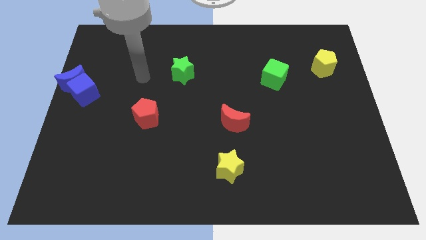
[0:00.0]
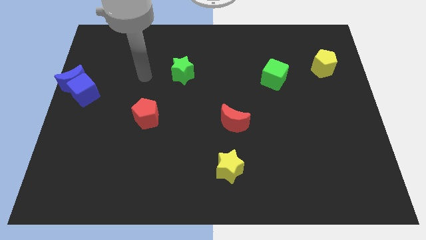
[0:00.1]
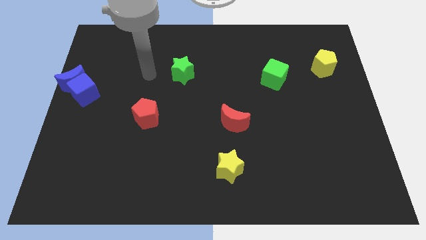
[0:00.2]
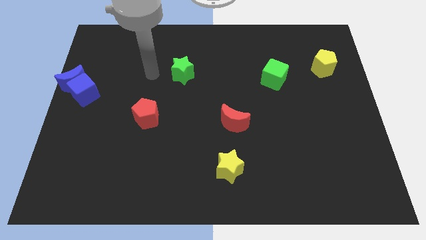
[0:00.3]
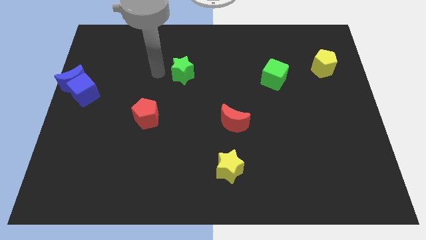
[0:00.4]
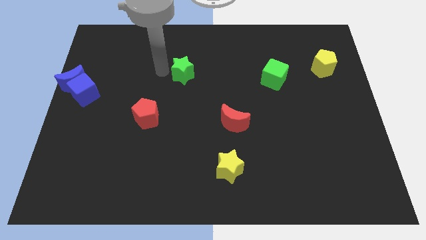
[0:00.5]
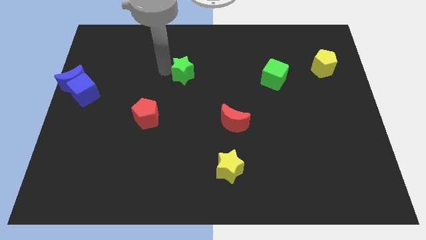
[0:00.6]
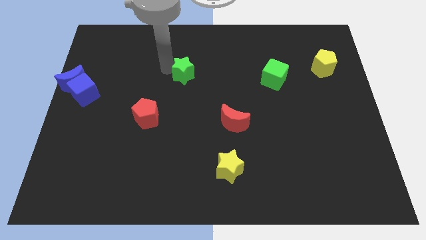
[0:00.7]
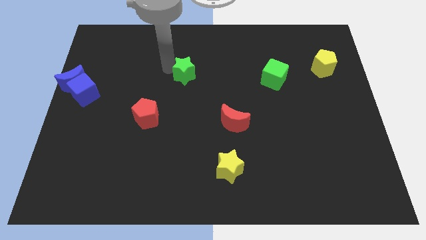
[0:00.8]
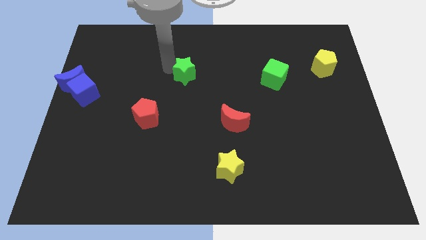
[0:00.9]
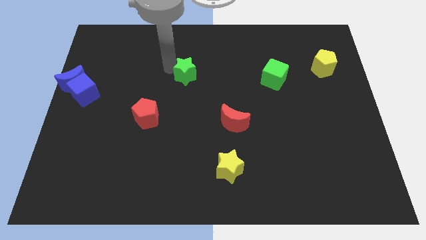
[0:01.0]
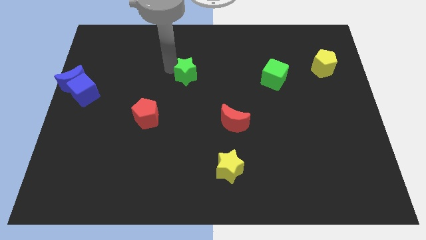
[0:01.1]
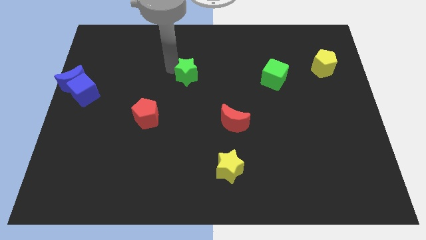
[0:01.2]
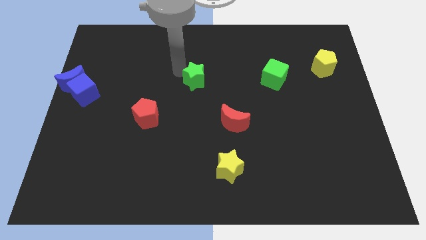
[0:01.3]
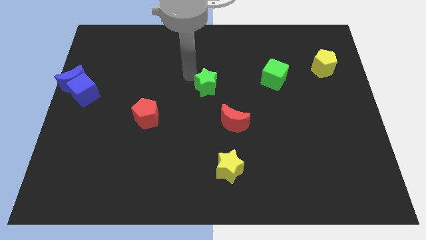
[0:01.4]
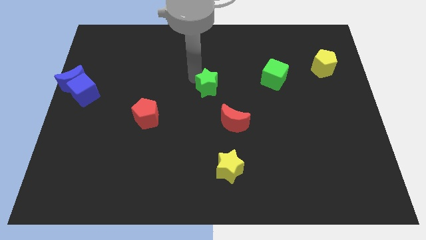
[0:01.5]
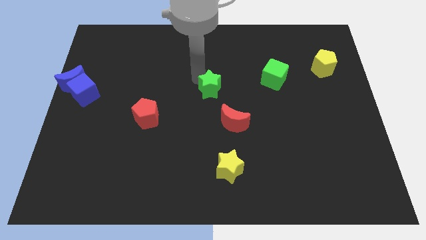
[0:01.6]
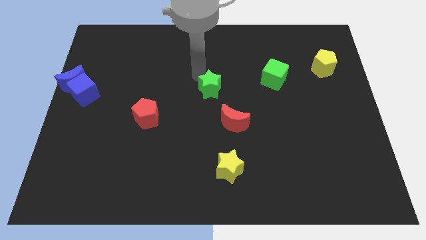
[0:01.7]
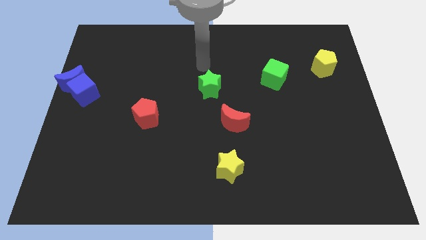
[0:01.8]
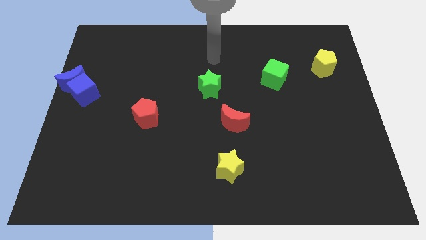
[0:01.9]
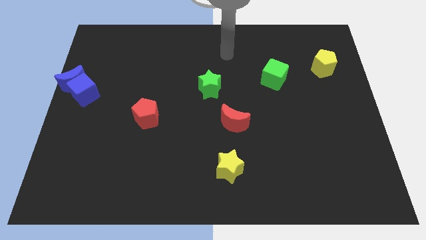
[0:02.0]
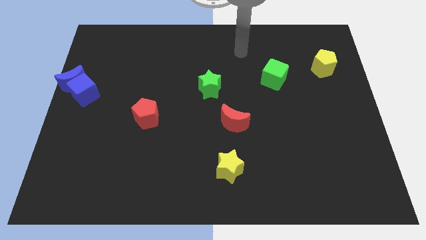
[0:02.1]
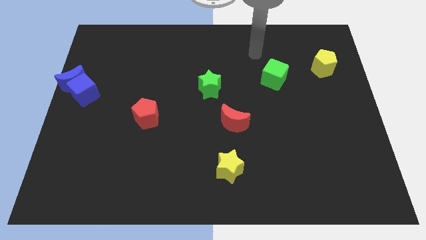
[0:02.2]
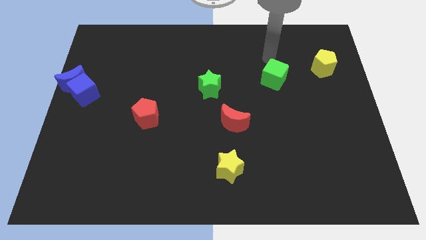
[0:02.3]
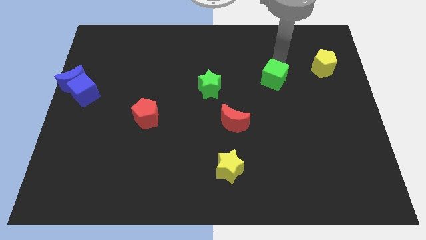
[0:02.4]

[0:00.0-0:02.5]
place the green star at the center of the board

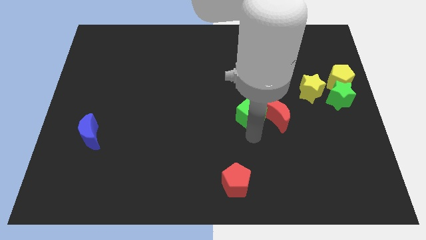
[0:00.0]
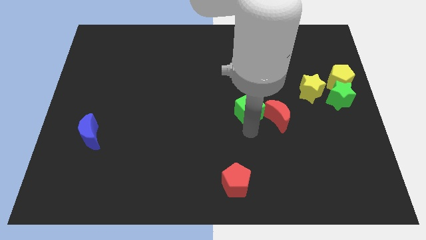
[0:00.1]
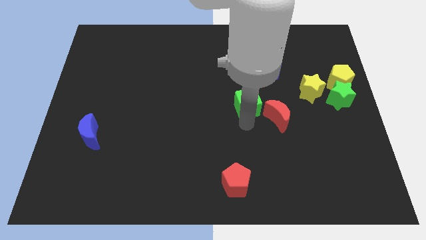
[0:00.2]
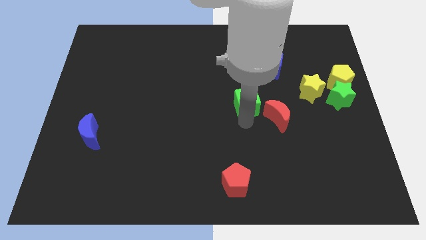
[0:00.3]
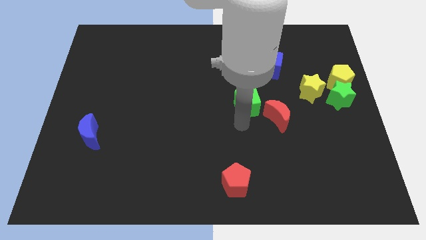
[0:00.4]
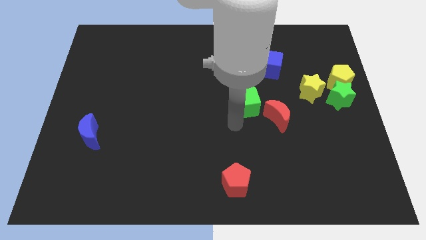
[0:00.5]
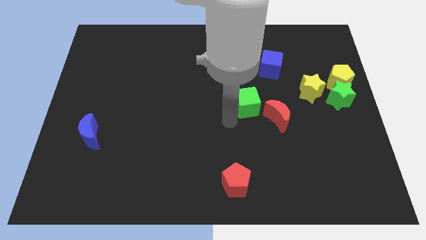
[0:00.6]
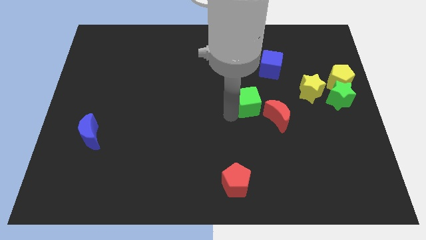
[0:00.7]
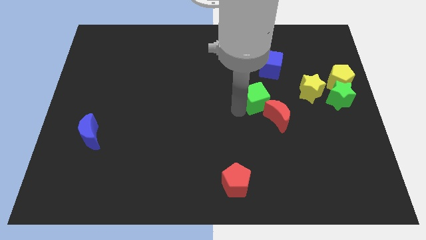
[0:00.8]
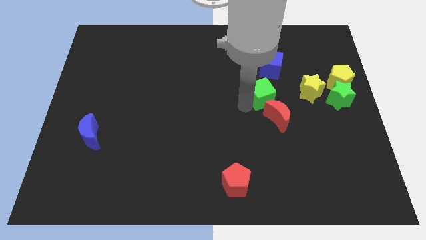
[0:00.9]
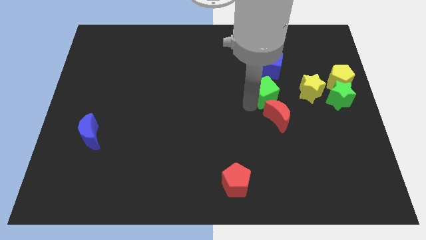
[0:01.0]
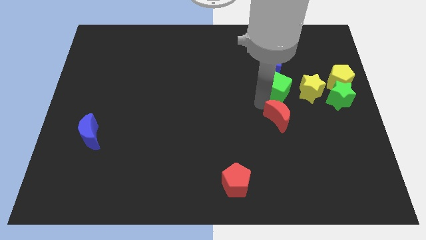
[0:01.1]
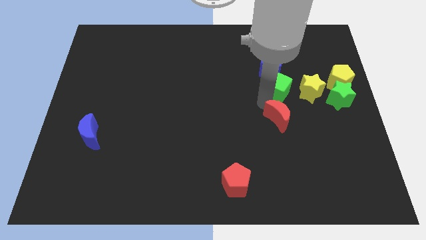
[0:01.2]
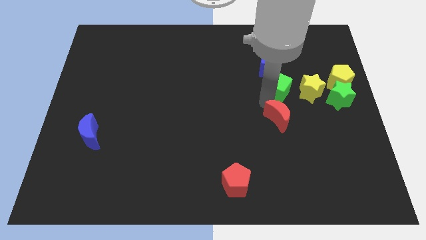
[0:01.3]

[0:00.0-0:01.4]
push the green cube to the top side of the red crescent

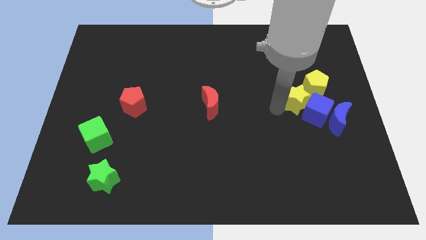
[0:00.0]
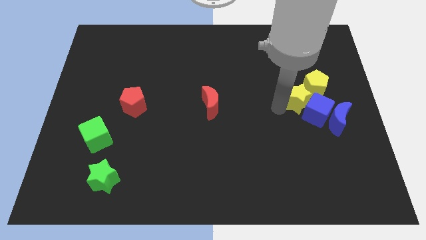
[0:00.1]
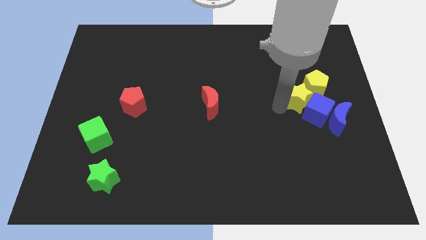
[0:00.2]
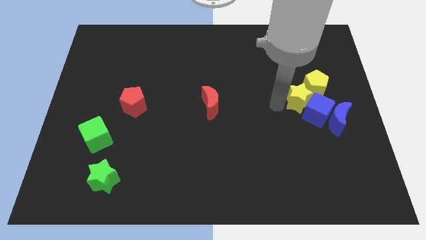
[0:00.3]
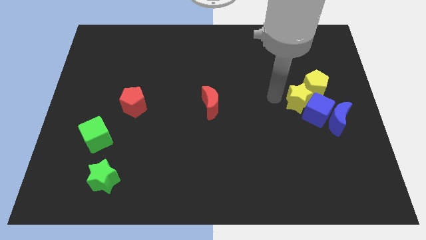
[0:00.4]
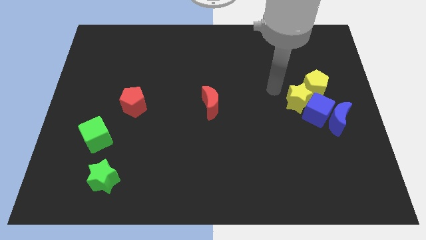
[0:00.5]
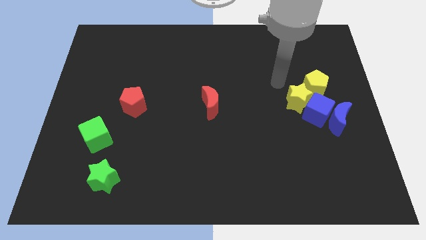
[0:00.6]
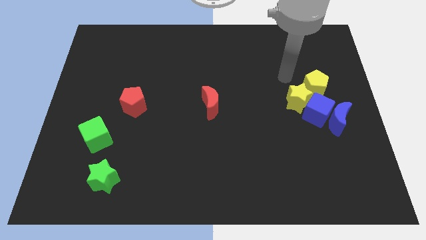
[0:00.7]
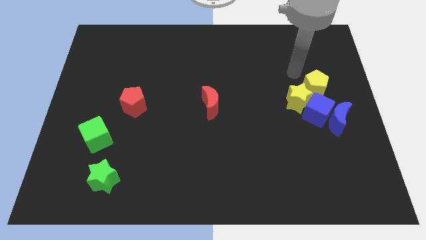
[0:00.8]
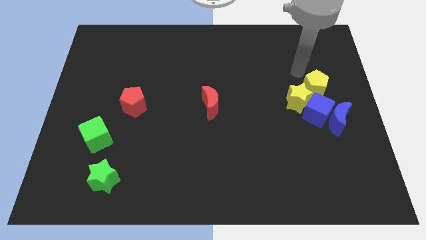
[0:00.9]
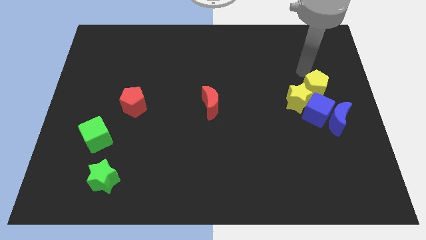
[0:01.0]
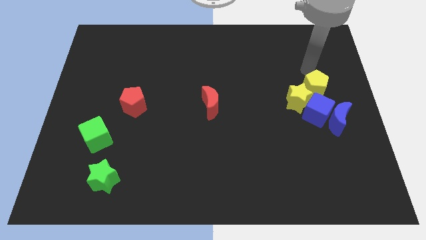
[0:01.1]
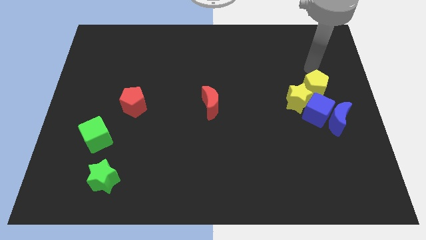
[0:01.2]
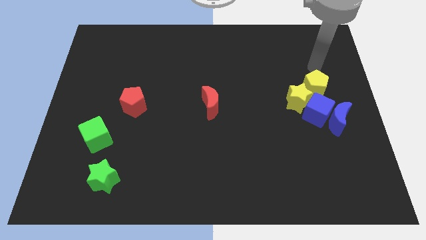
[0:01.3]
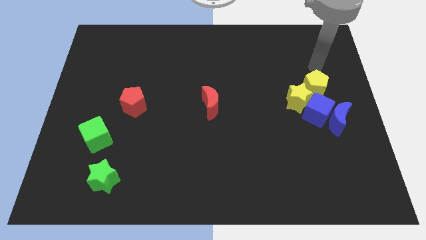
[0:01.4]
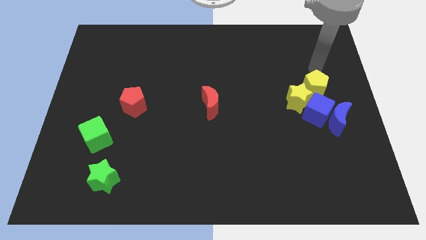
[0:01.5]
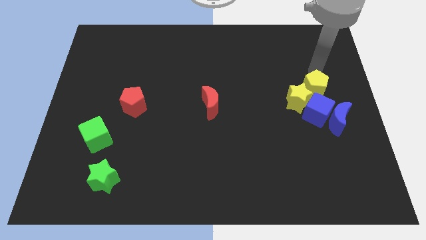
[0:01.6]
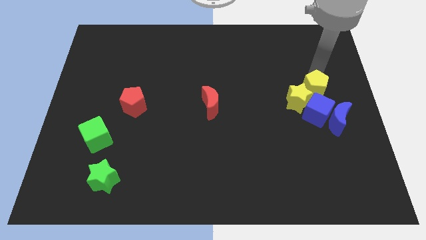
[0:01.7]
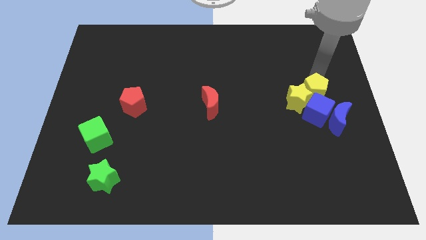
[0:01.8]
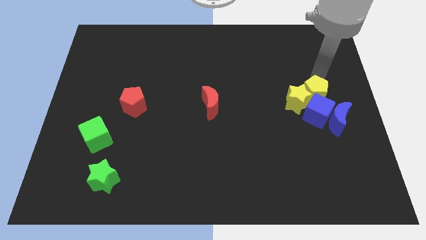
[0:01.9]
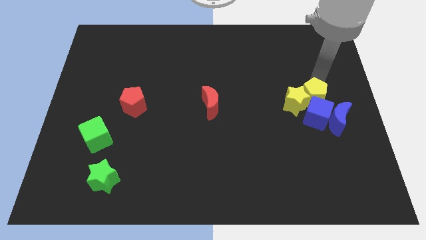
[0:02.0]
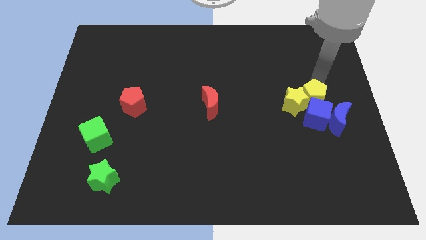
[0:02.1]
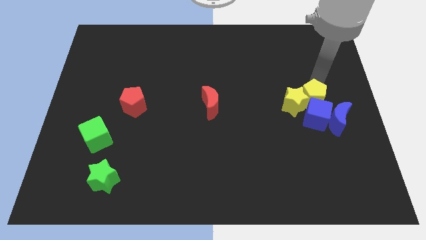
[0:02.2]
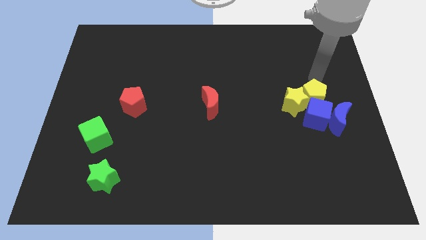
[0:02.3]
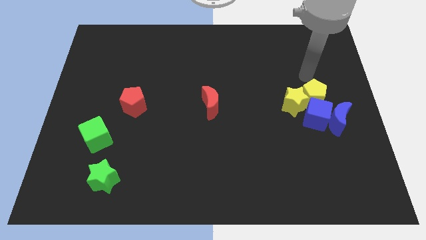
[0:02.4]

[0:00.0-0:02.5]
make a group out of yellow blocks and blue blocks

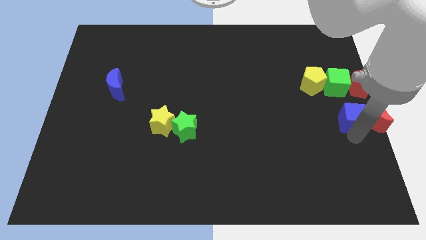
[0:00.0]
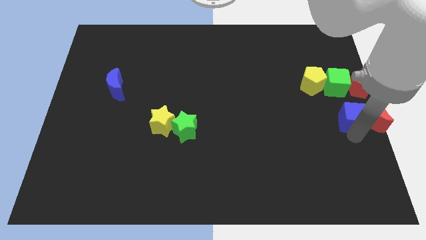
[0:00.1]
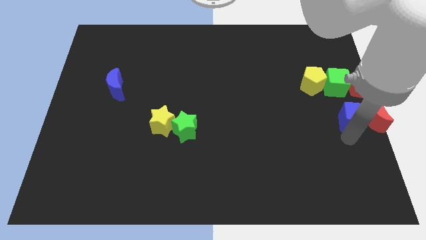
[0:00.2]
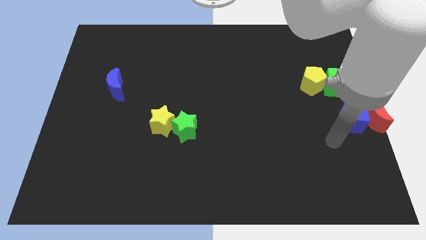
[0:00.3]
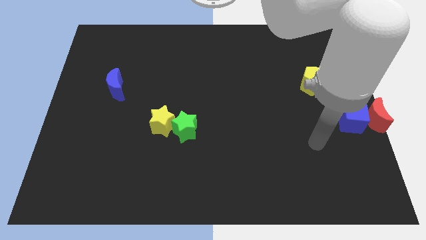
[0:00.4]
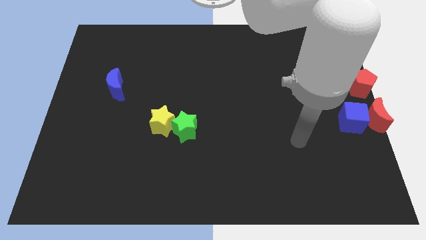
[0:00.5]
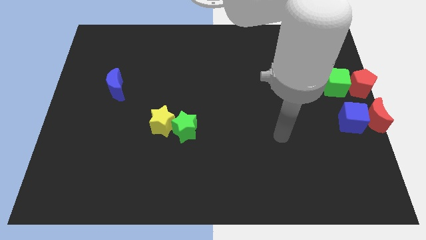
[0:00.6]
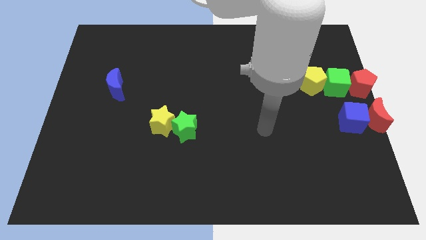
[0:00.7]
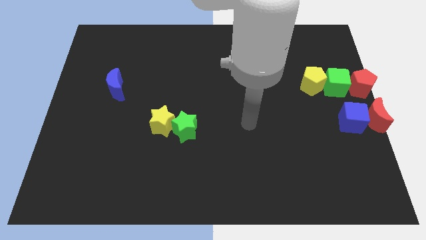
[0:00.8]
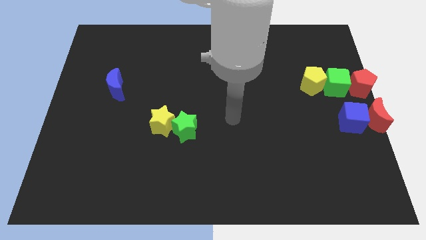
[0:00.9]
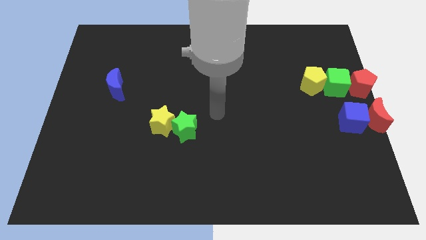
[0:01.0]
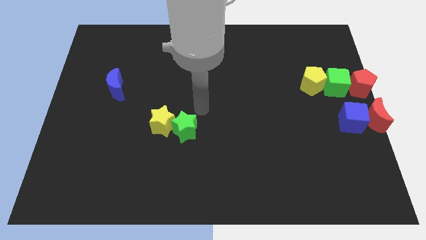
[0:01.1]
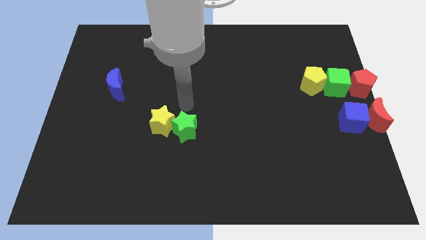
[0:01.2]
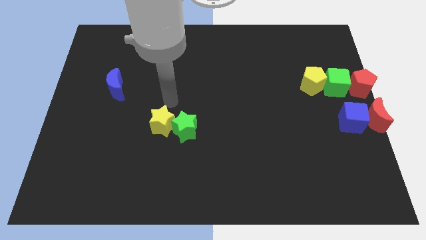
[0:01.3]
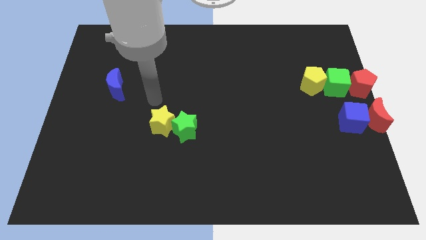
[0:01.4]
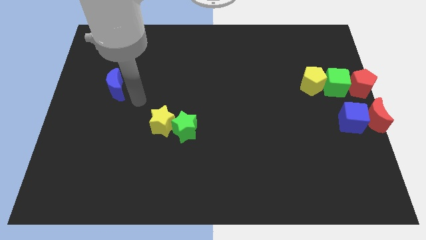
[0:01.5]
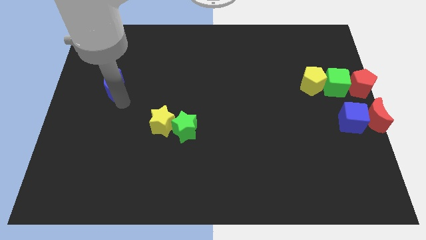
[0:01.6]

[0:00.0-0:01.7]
move your arm away from the blue cube

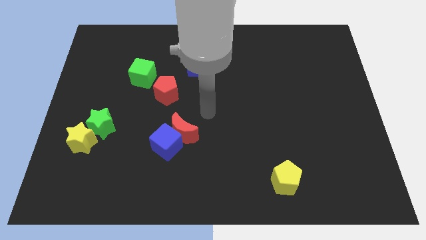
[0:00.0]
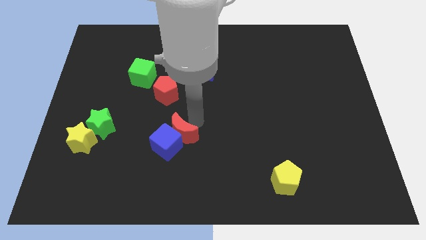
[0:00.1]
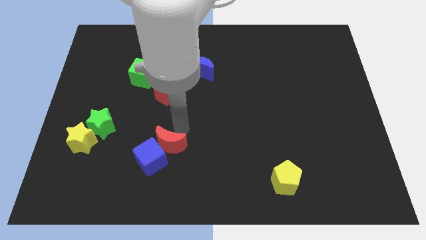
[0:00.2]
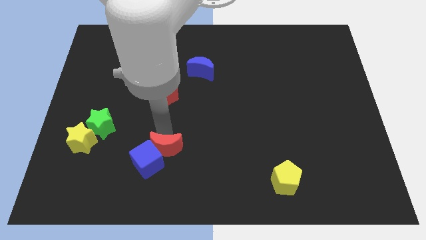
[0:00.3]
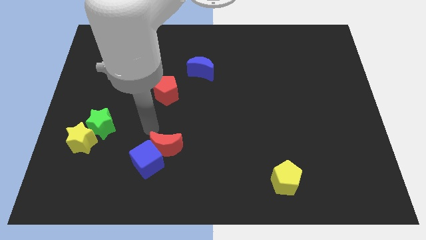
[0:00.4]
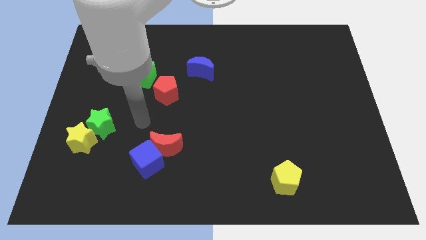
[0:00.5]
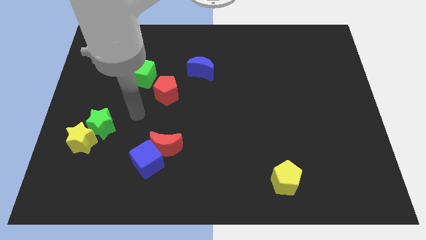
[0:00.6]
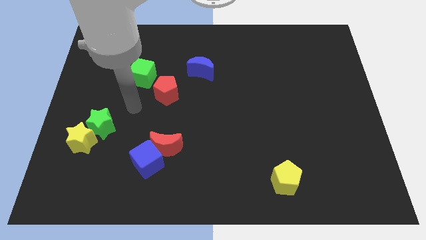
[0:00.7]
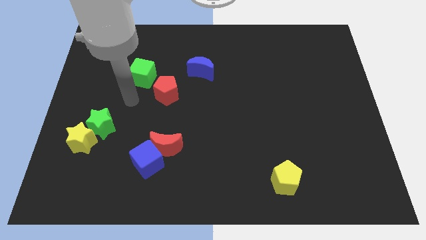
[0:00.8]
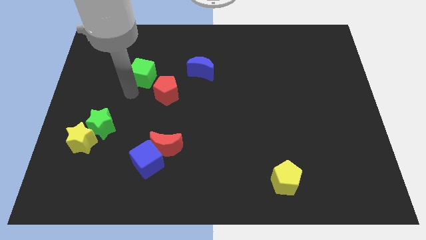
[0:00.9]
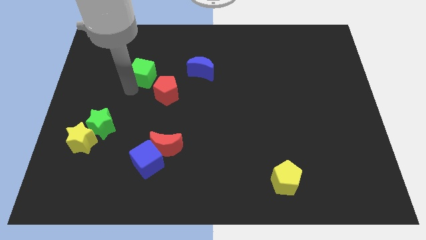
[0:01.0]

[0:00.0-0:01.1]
push the red moon and blue cube to bottom left
